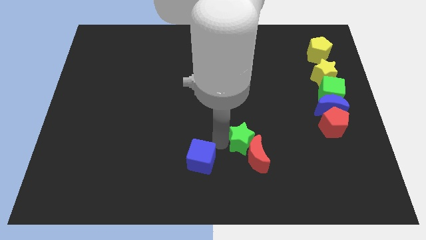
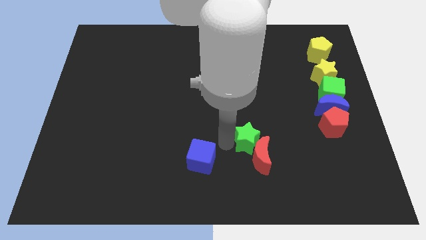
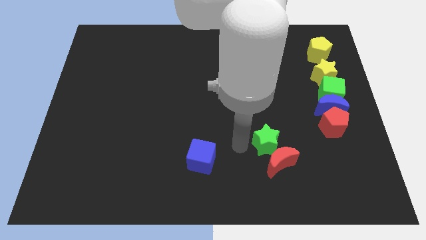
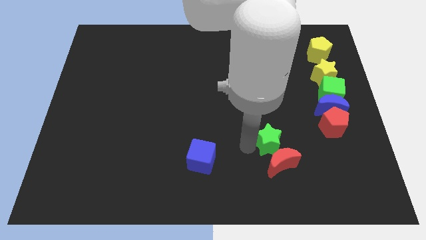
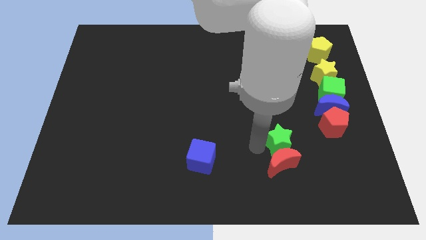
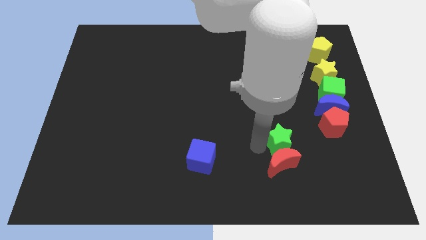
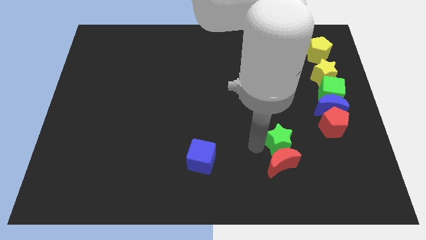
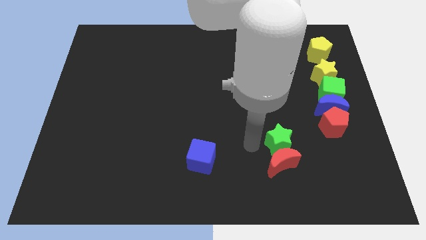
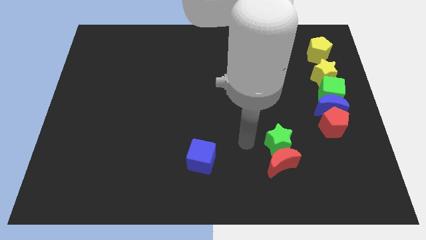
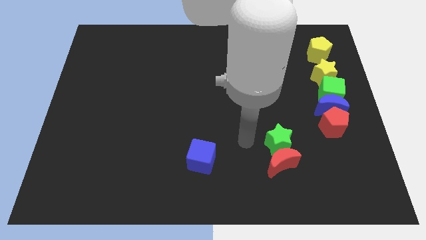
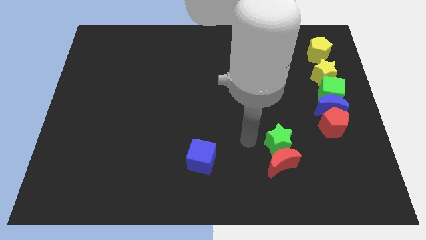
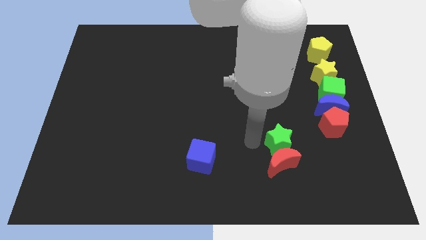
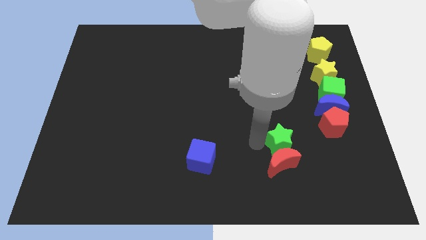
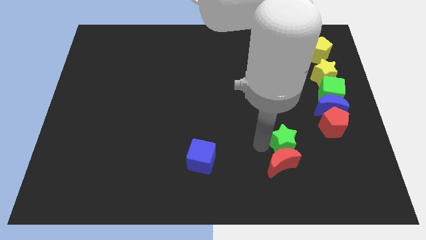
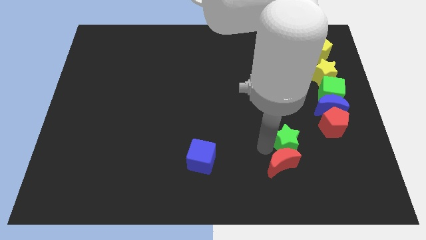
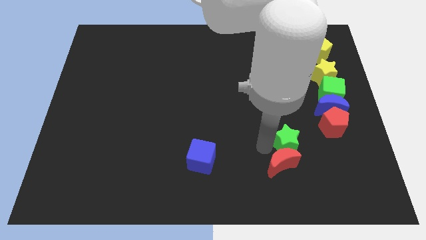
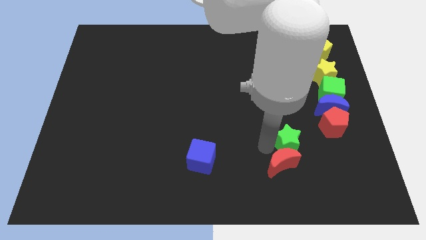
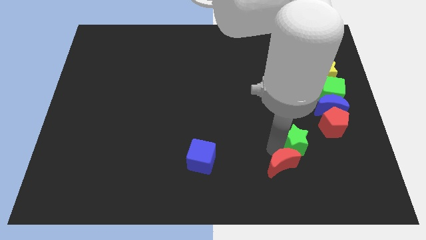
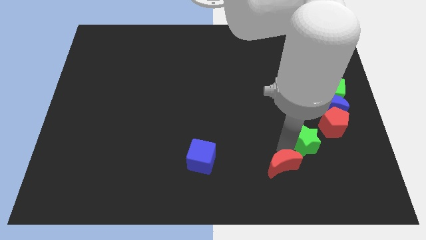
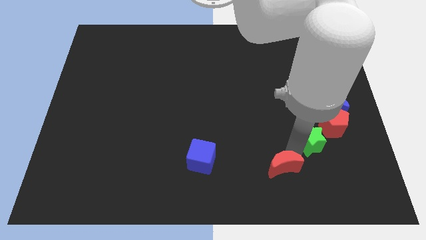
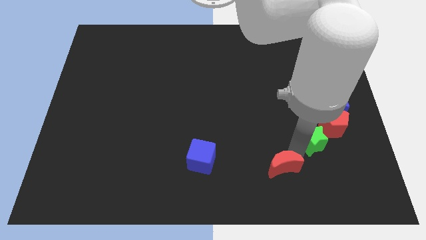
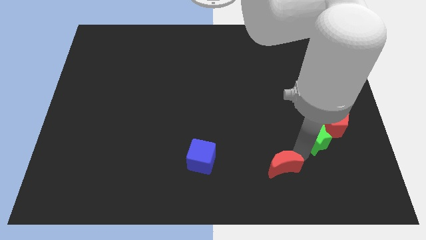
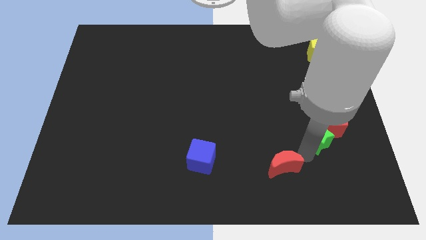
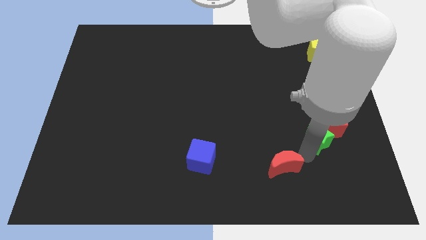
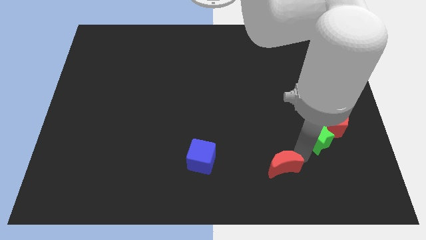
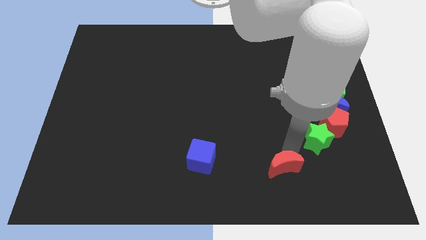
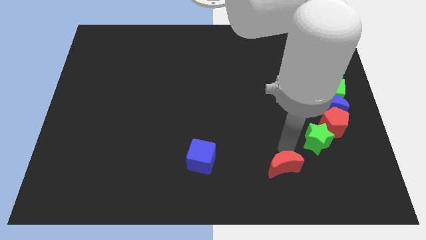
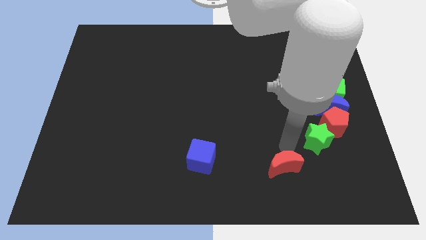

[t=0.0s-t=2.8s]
move the green star towards right

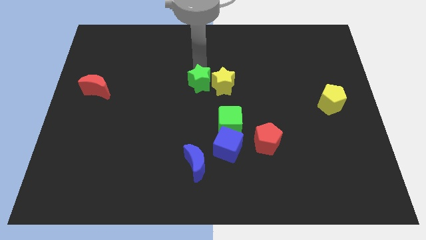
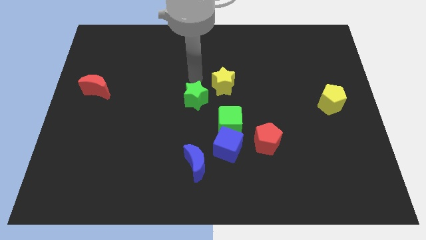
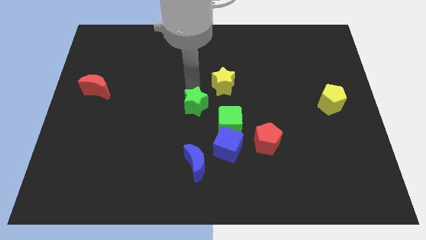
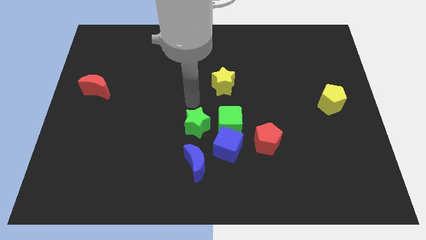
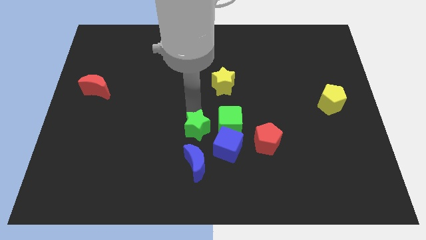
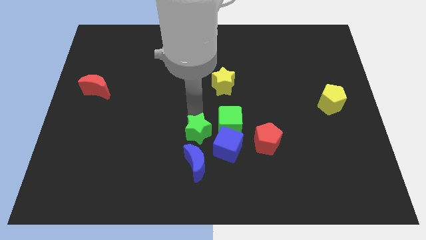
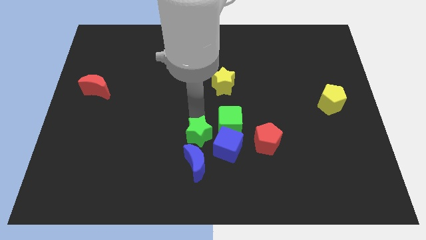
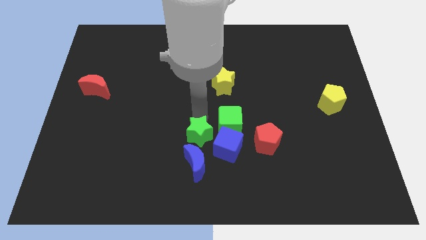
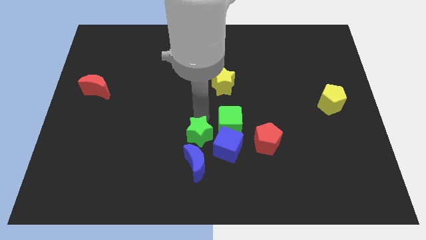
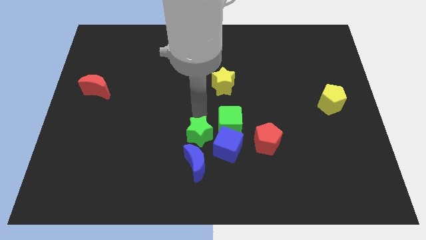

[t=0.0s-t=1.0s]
push the green star towards the blue crescent

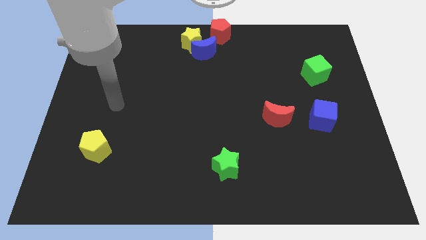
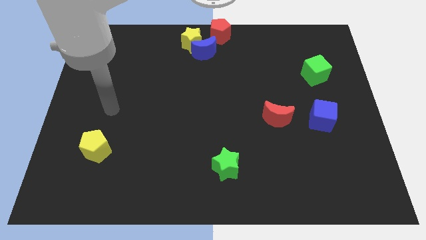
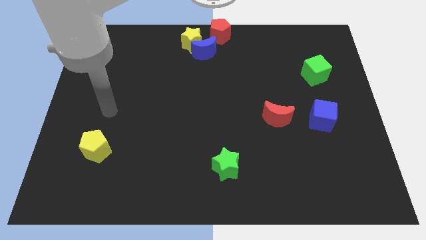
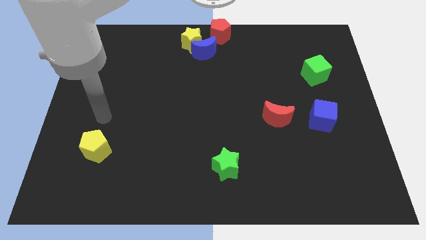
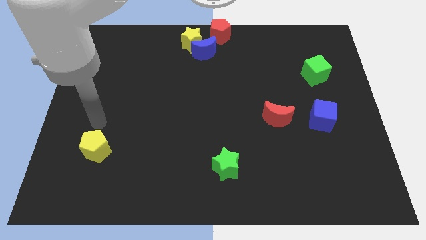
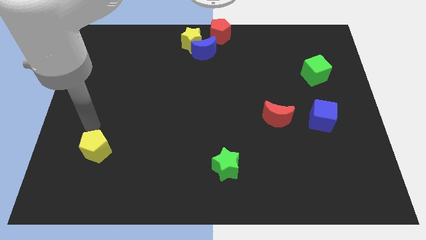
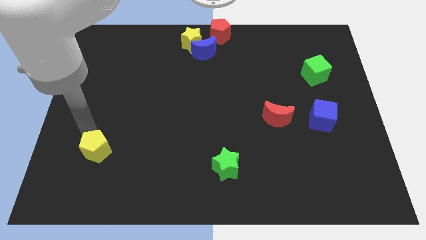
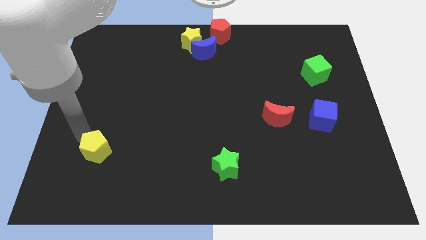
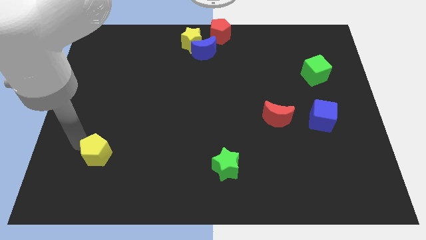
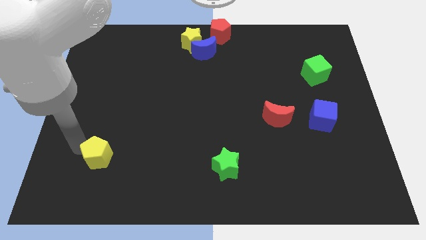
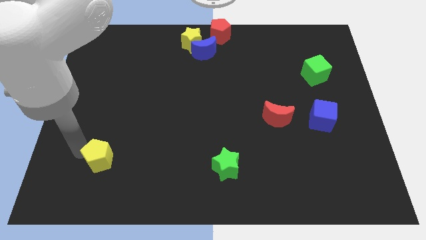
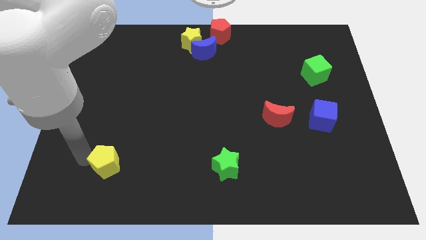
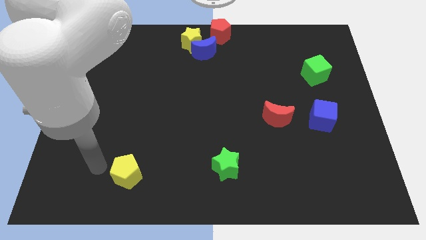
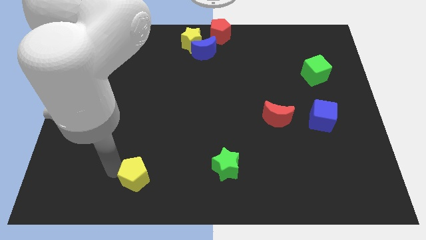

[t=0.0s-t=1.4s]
place the yellow pentagon left parallel to the green star

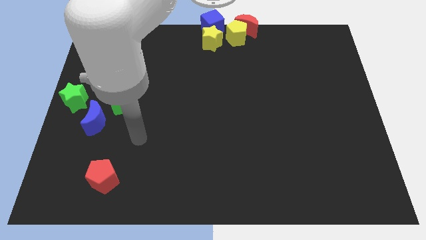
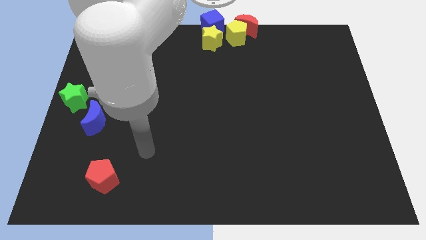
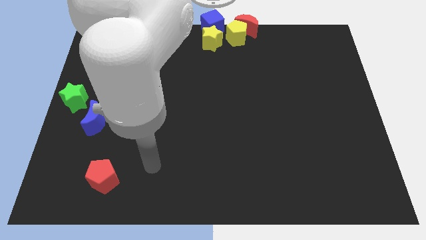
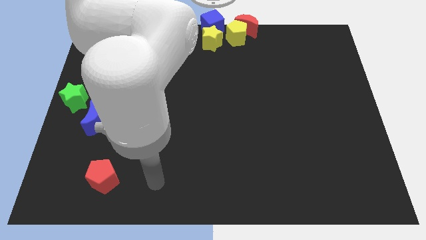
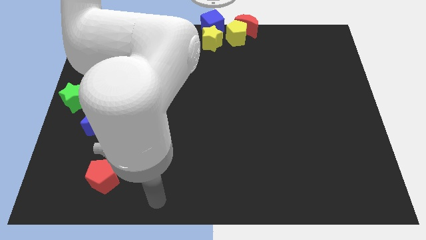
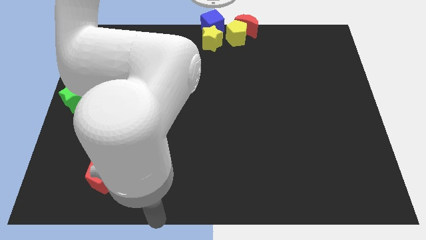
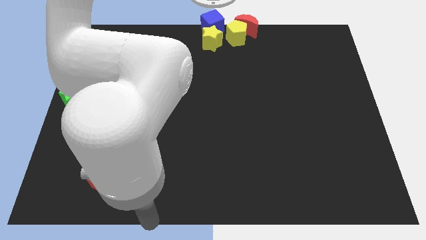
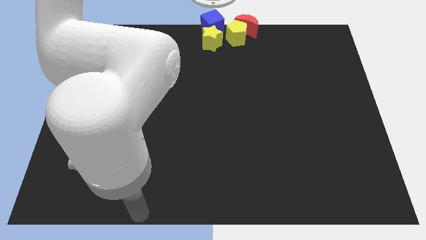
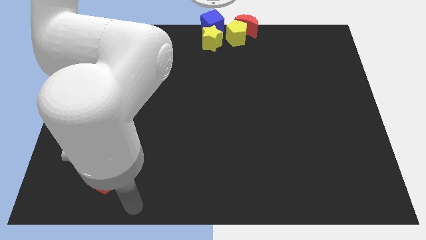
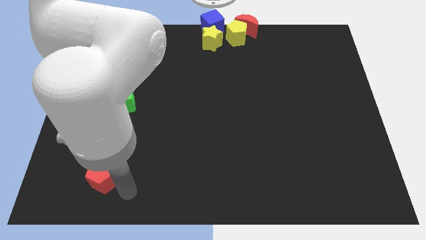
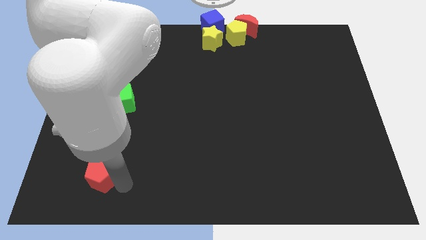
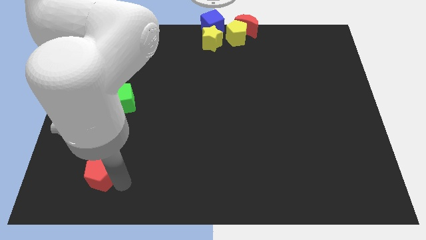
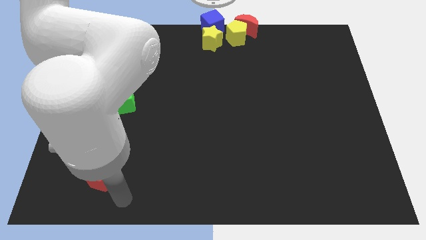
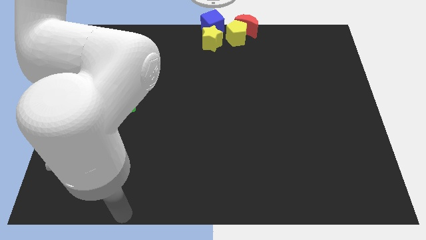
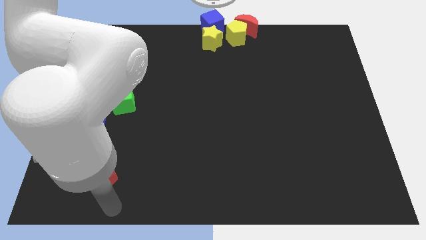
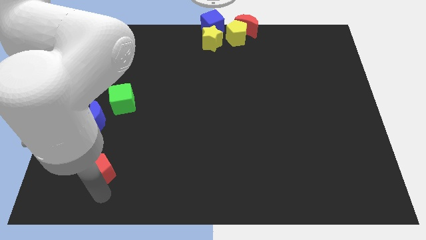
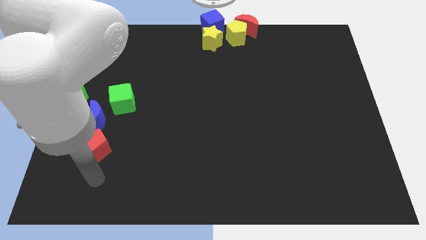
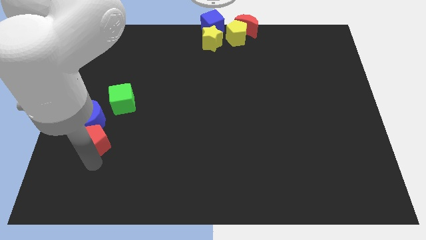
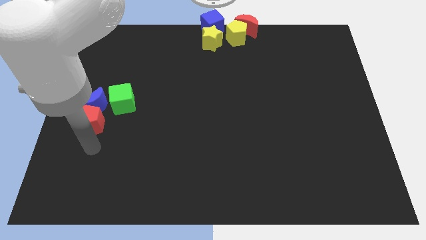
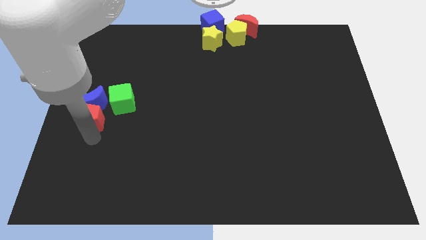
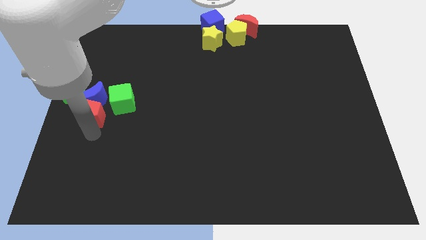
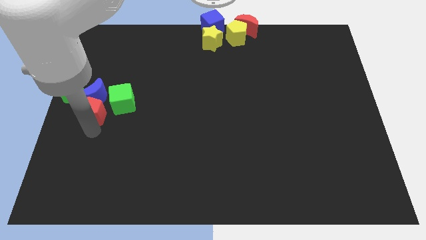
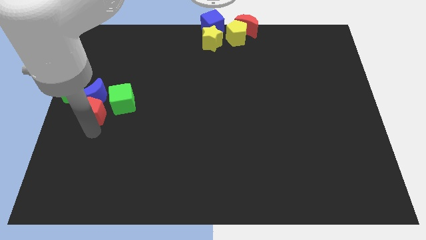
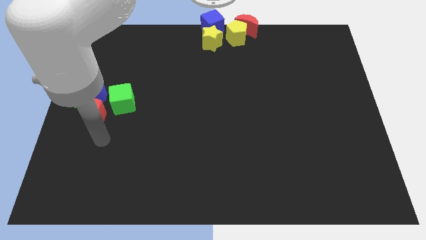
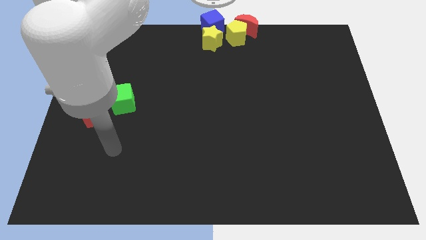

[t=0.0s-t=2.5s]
push the red pentagon into the blue moon

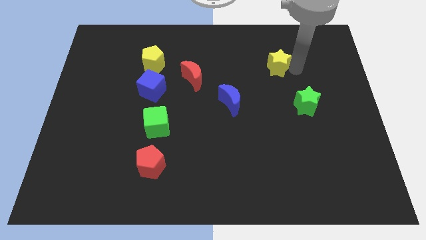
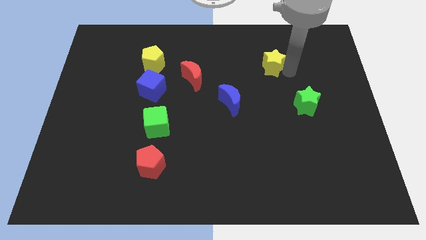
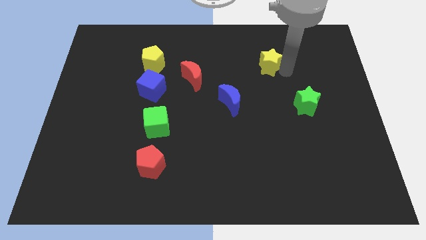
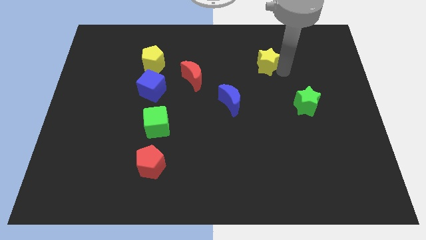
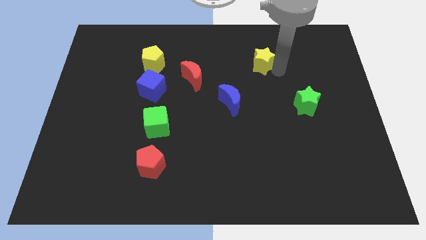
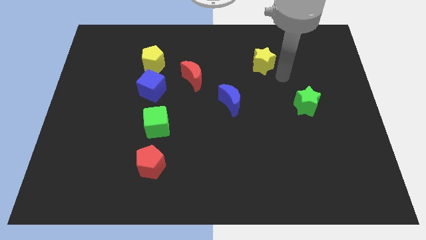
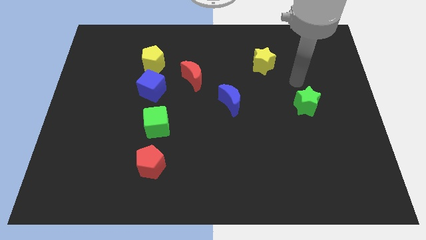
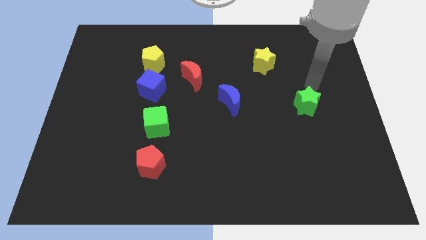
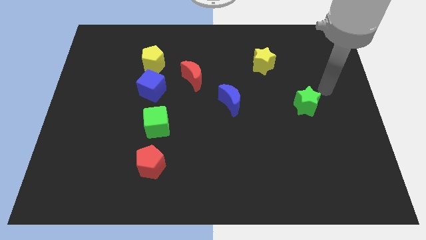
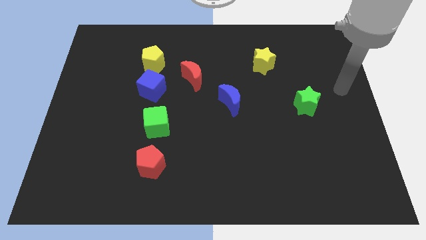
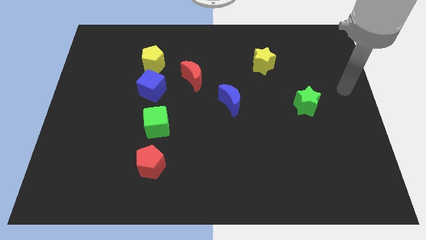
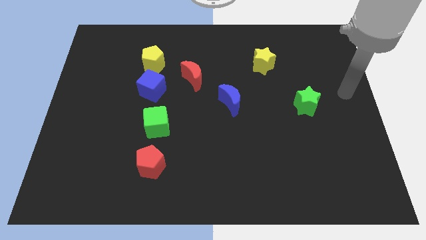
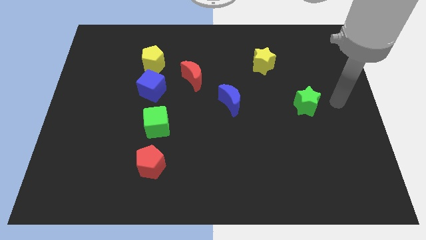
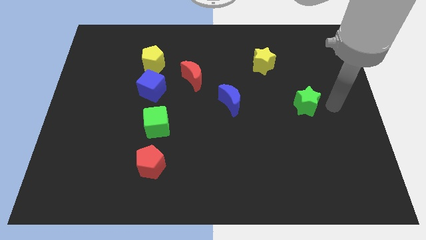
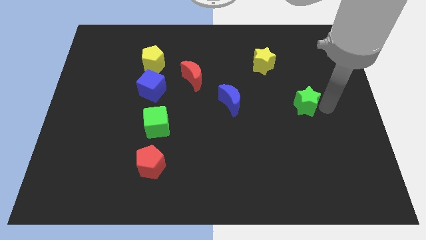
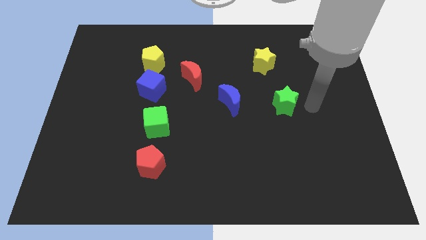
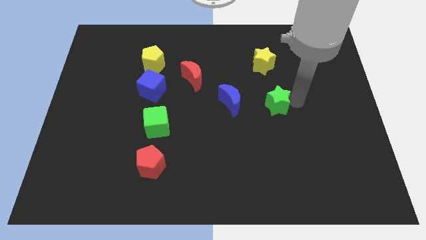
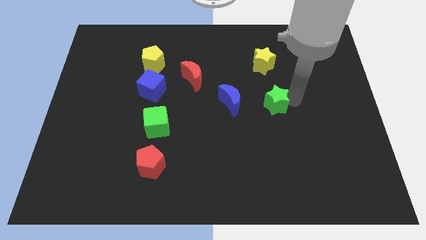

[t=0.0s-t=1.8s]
place the green star underneath the yellow star
